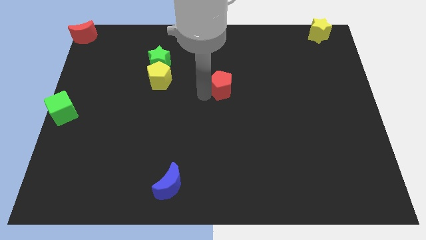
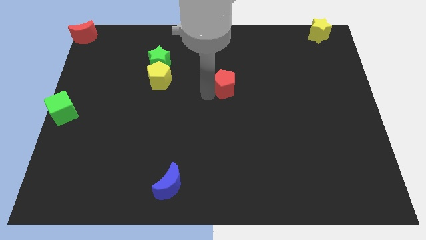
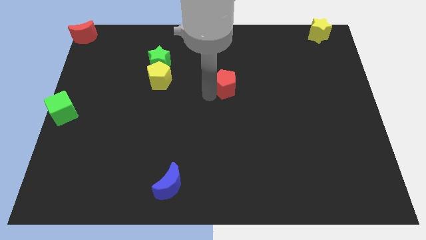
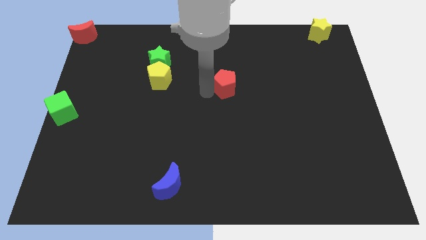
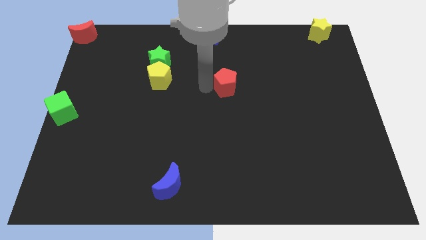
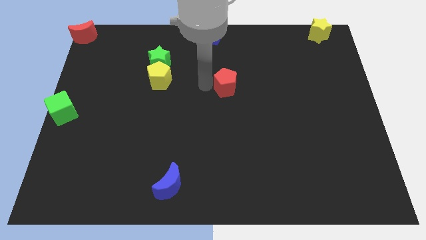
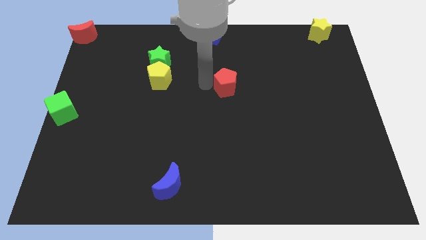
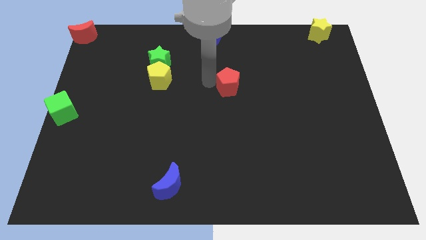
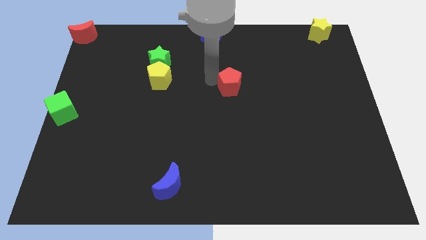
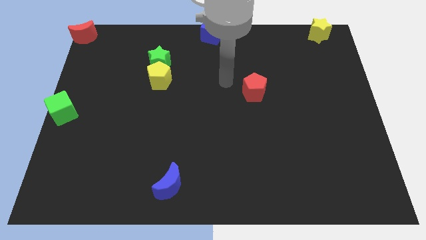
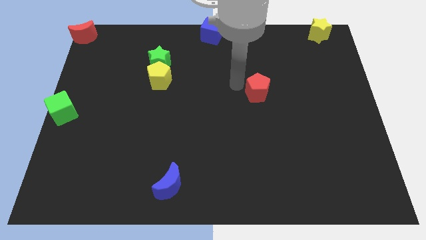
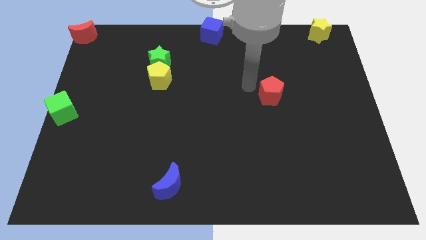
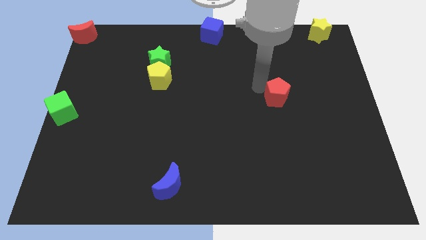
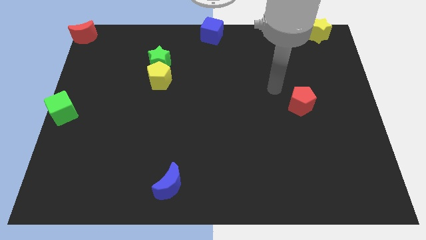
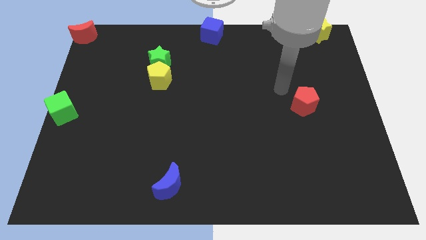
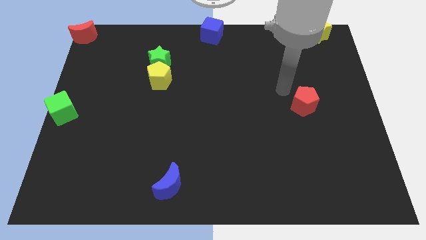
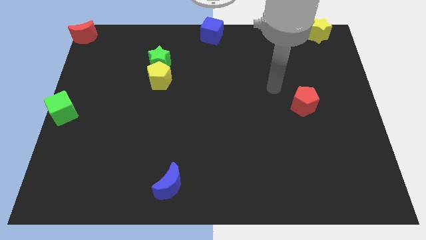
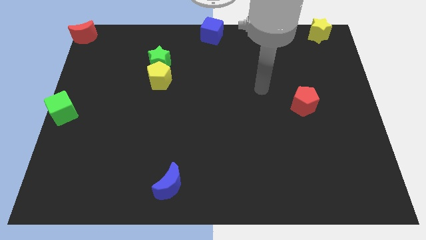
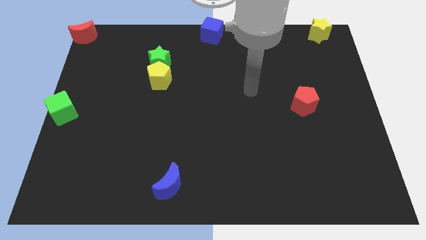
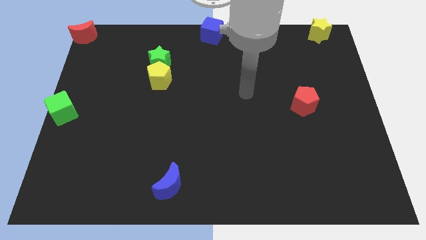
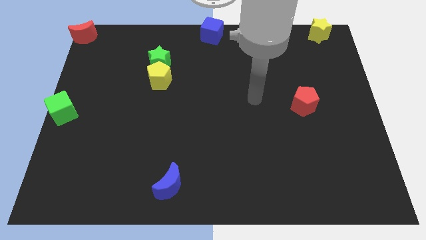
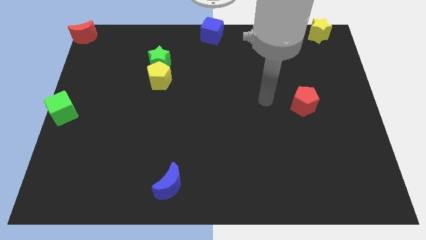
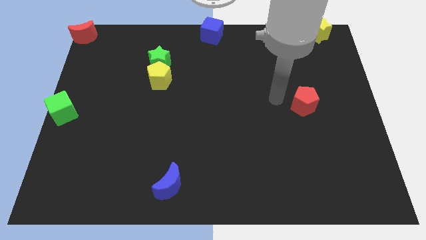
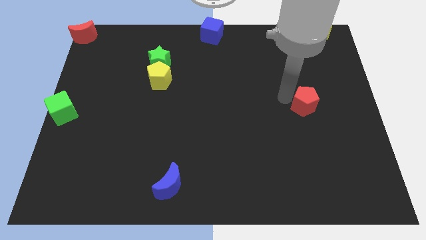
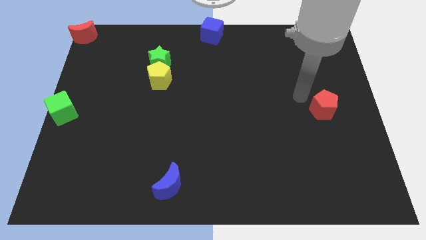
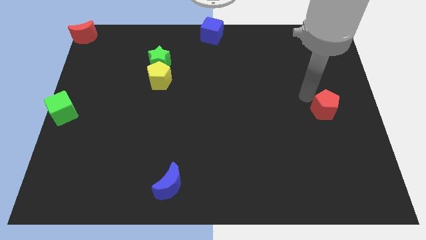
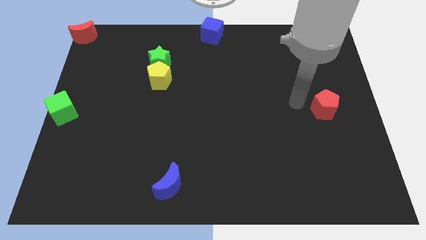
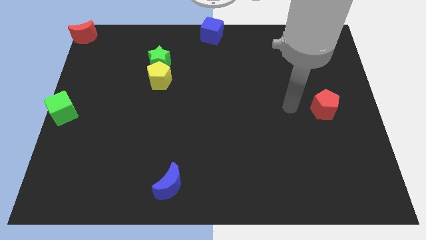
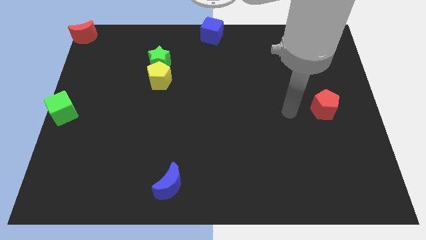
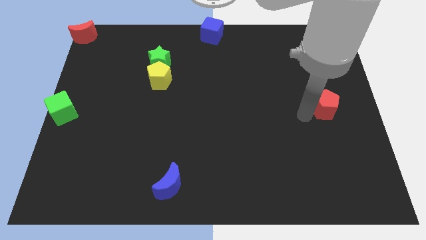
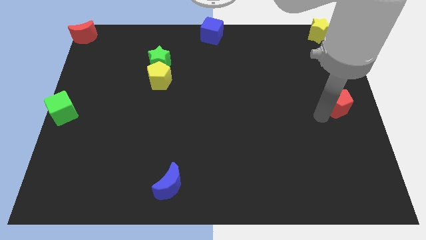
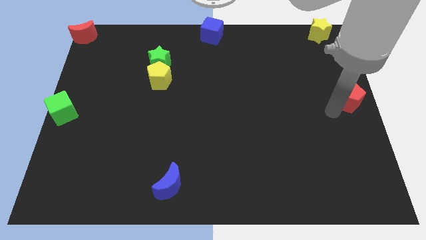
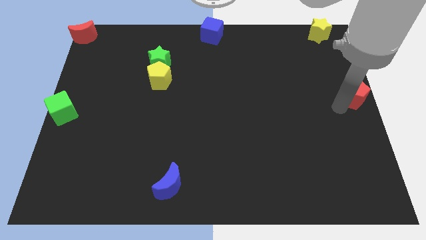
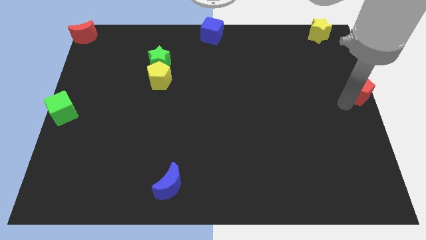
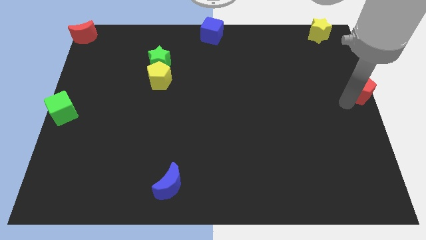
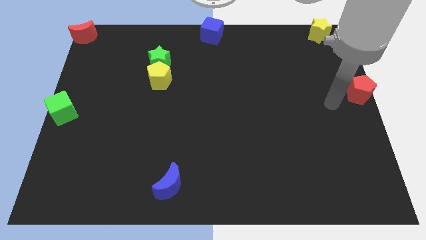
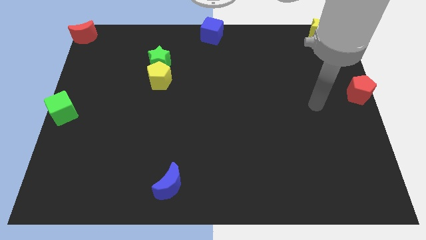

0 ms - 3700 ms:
push the red pentagon to the right center of the board

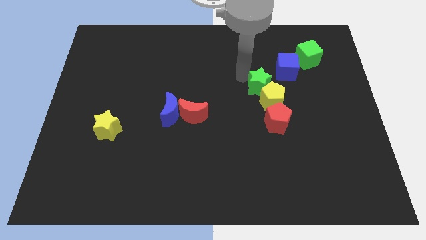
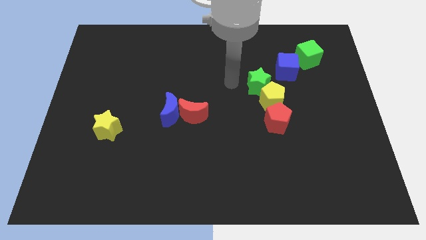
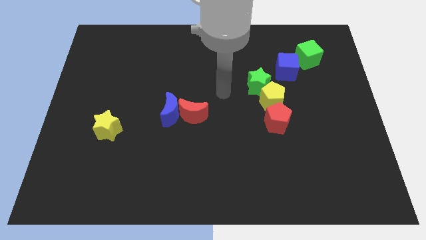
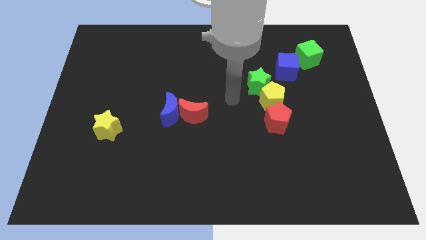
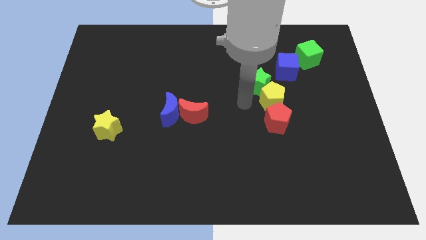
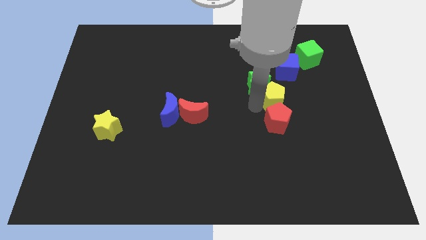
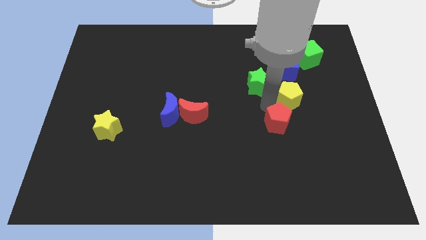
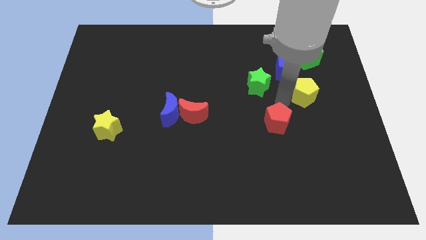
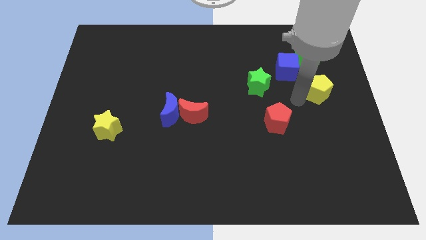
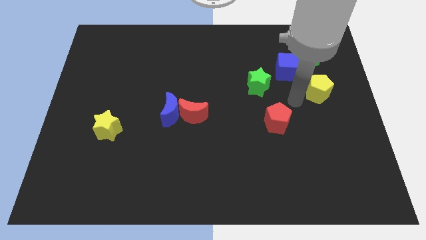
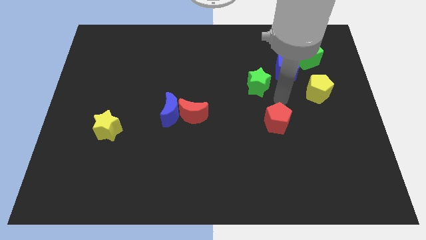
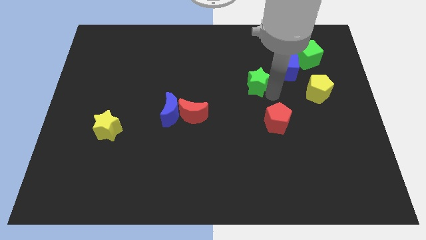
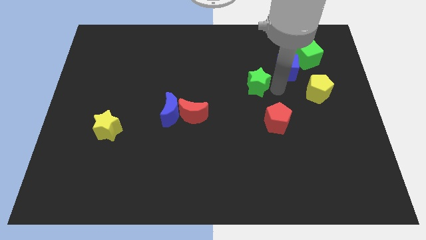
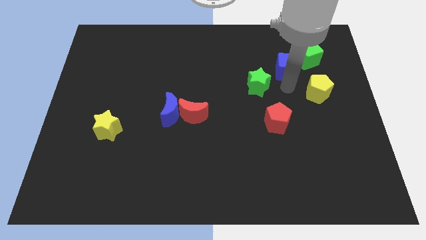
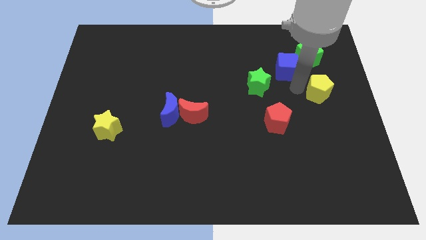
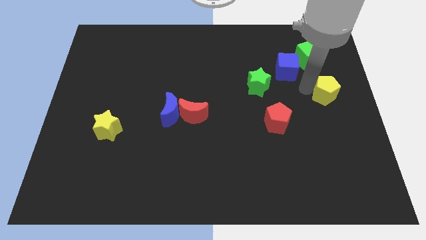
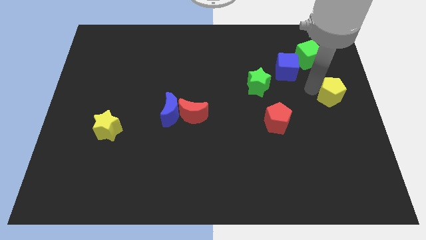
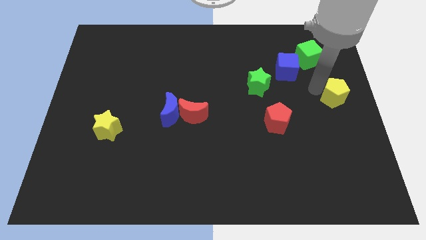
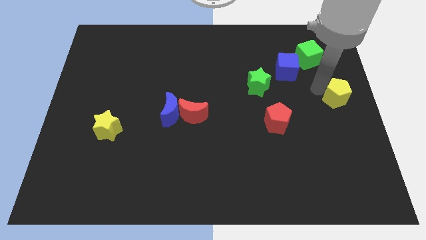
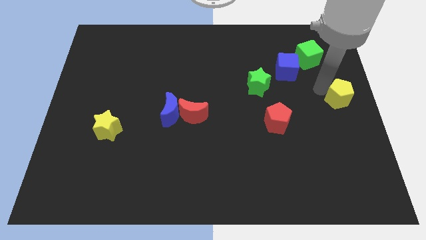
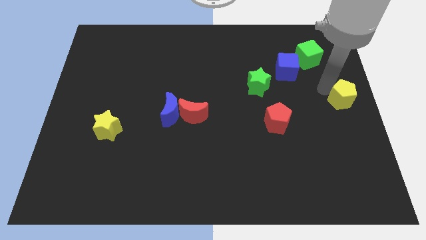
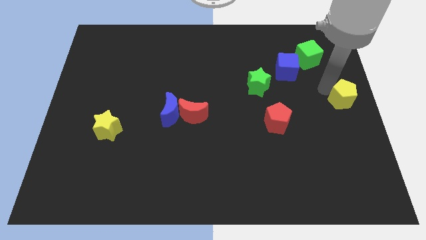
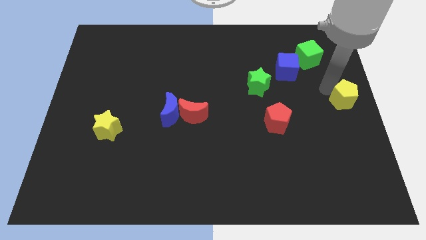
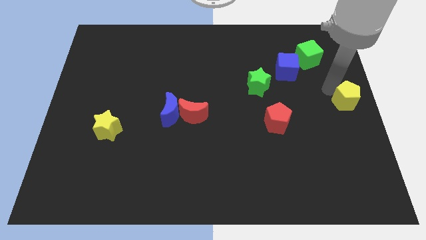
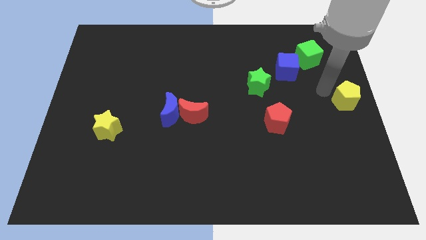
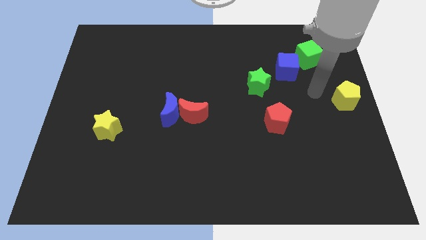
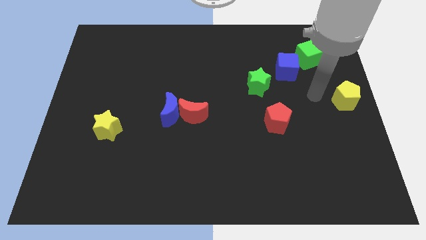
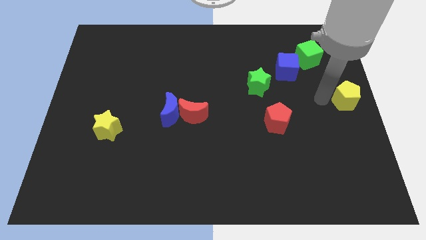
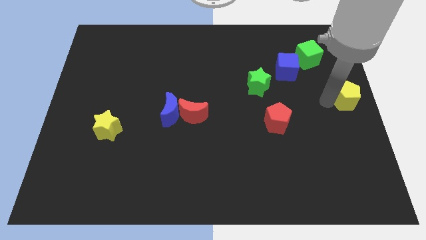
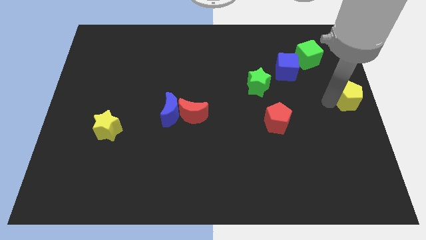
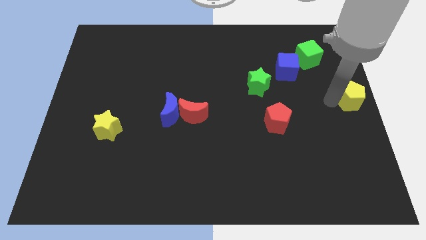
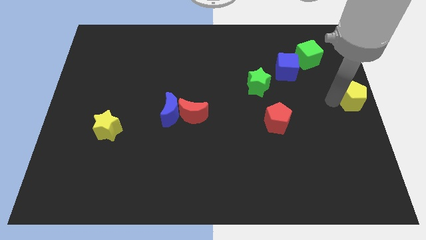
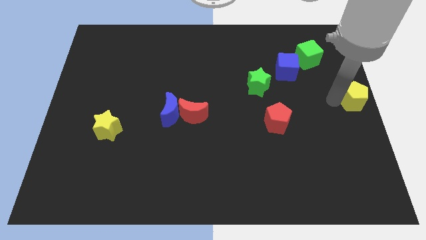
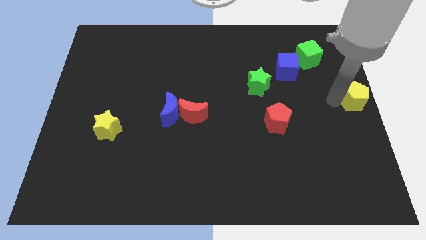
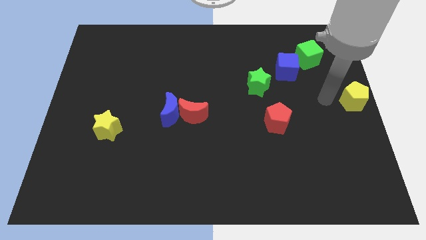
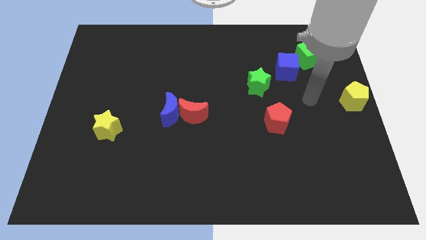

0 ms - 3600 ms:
move the yellow pentagon to the right center of the board

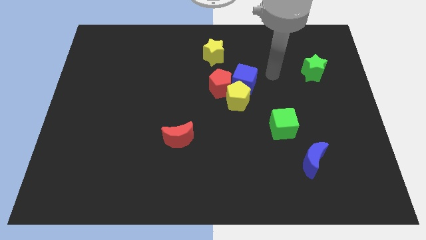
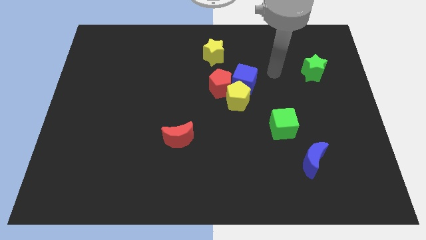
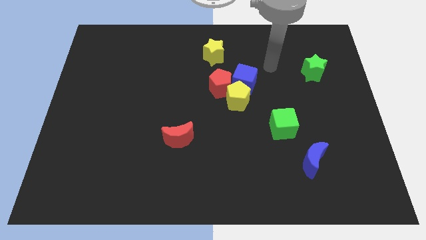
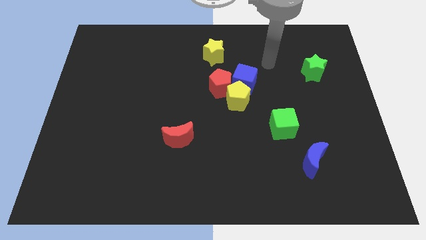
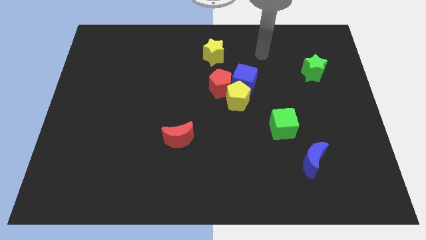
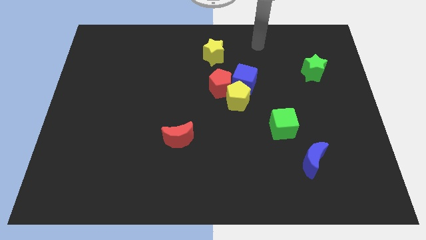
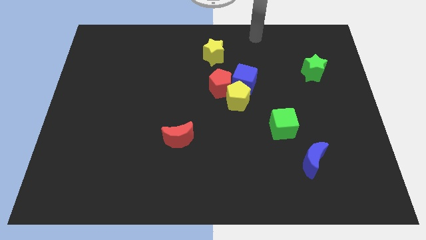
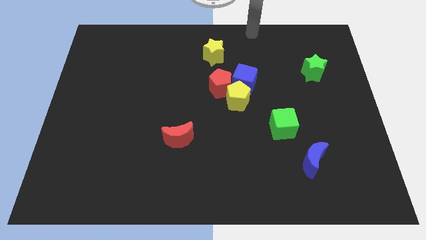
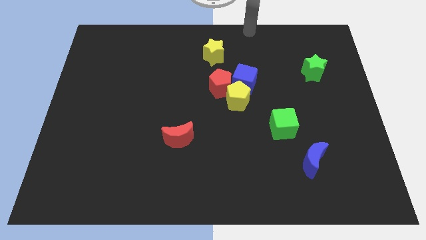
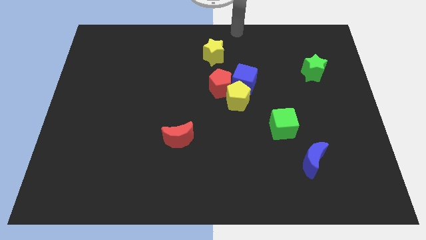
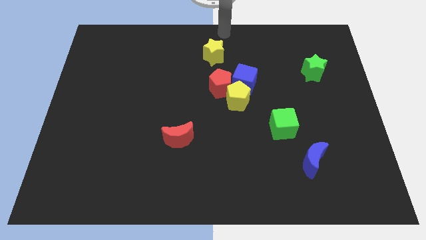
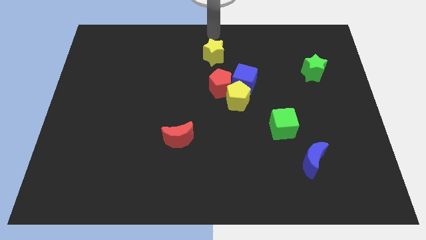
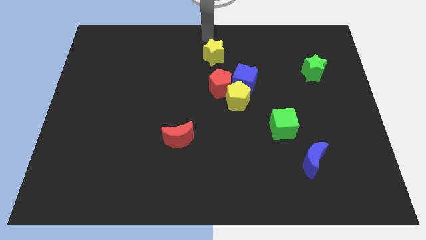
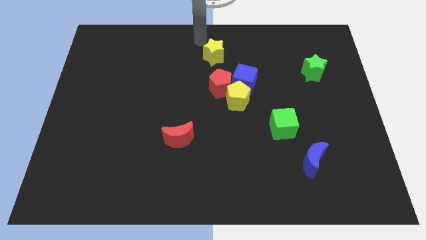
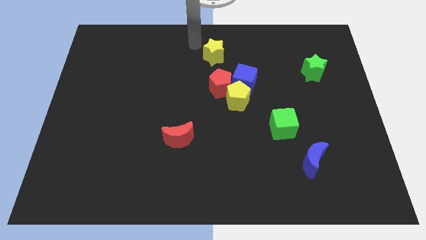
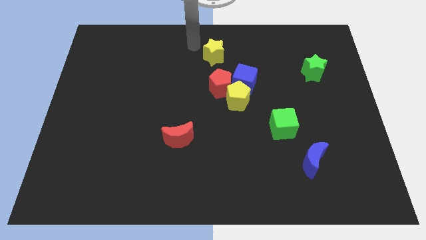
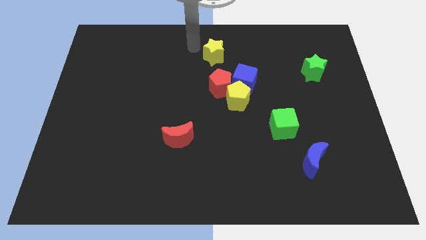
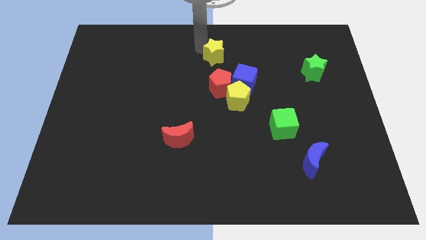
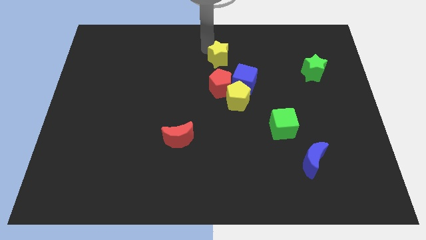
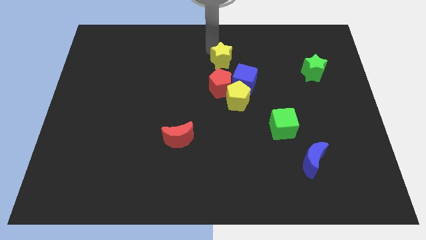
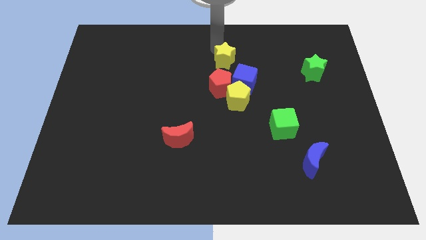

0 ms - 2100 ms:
slide the yellow star towards top left of the blue cube
